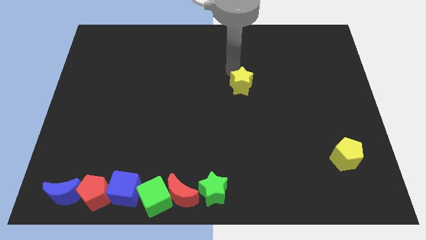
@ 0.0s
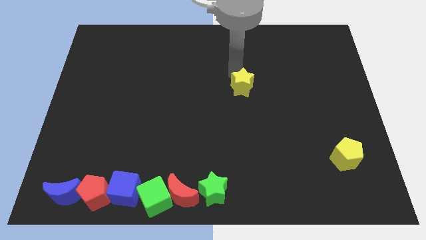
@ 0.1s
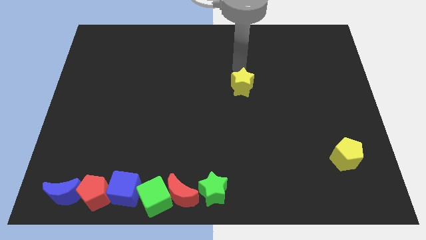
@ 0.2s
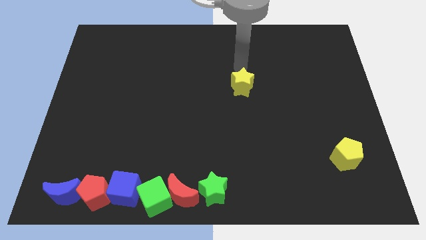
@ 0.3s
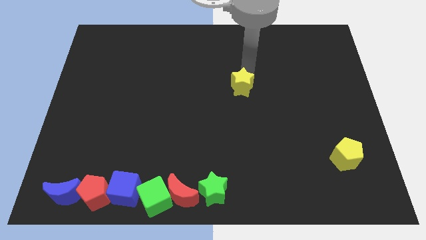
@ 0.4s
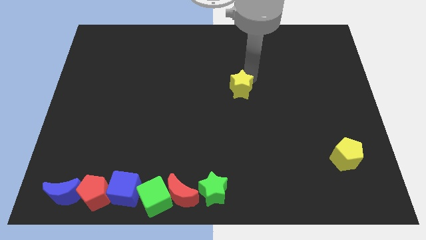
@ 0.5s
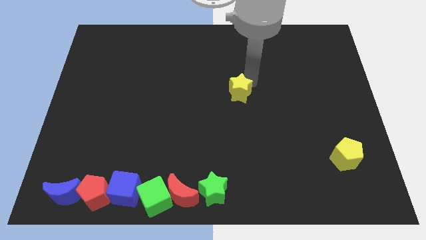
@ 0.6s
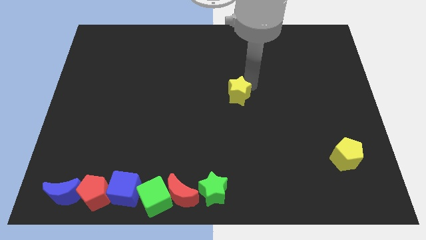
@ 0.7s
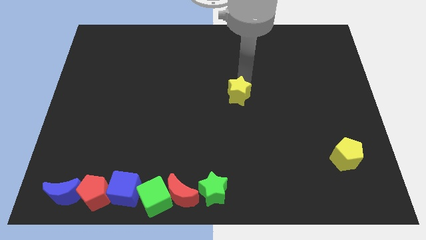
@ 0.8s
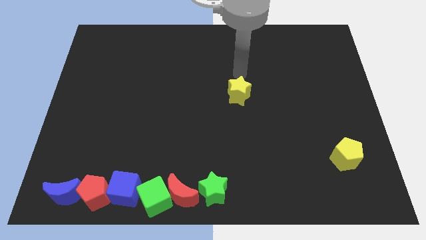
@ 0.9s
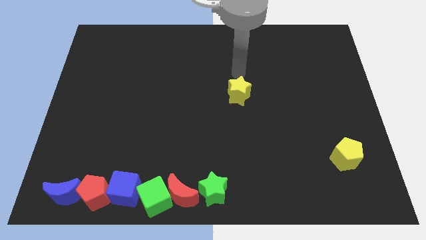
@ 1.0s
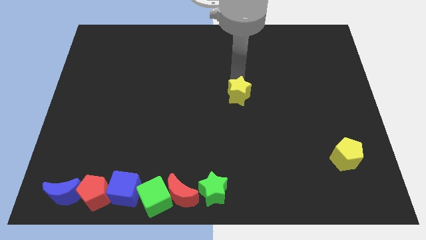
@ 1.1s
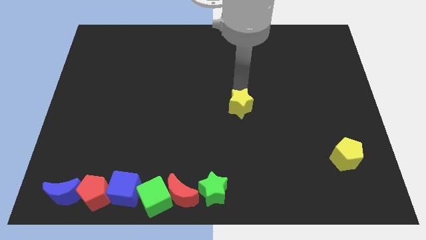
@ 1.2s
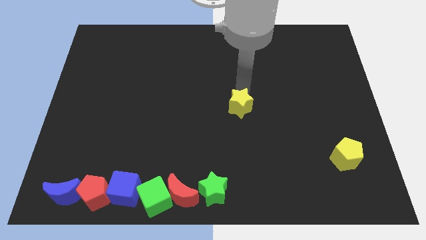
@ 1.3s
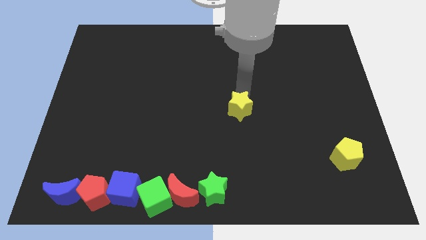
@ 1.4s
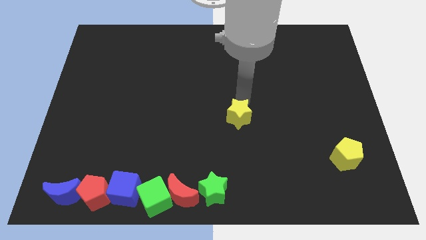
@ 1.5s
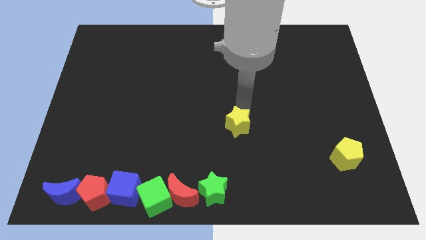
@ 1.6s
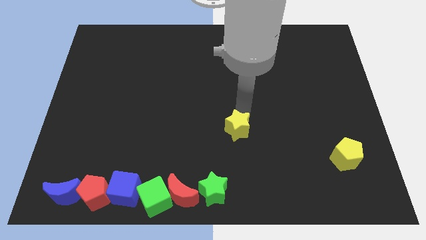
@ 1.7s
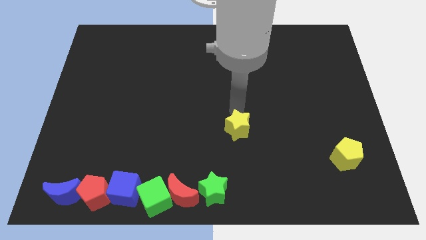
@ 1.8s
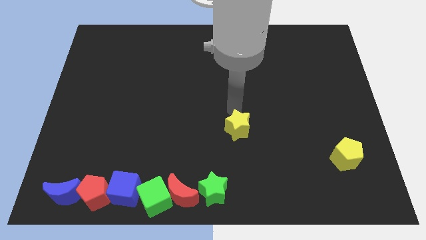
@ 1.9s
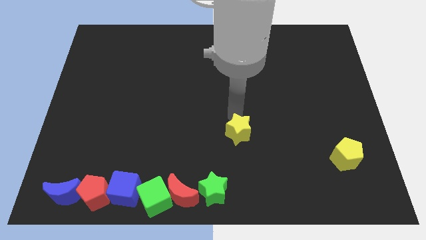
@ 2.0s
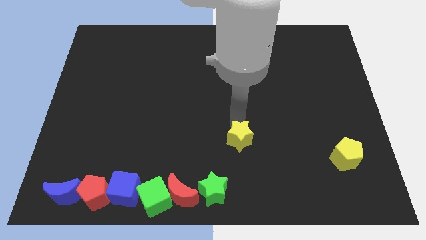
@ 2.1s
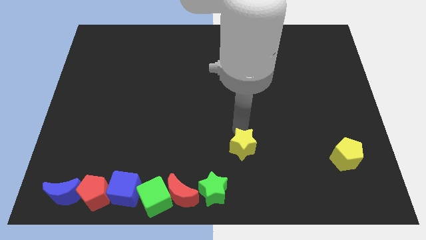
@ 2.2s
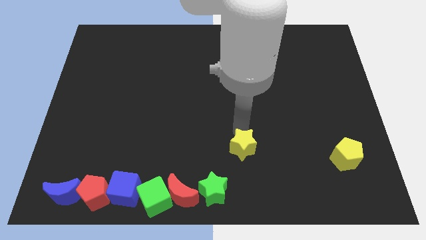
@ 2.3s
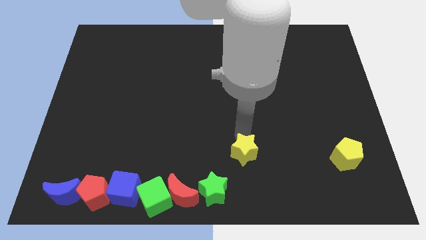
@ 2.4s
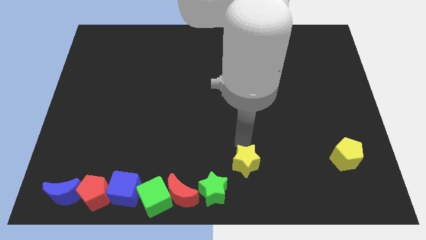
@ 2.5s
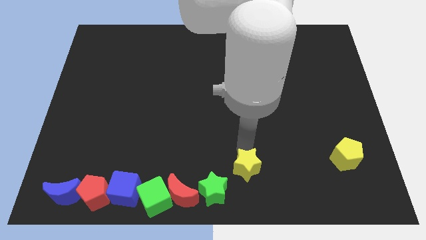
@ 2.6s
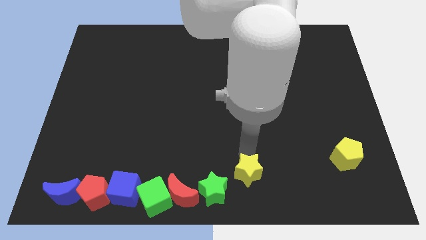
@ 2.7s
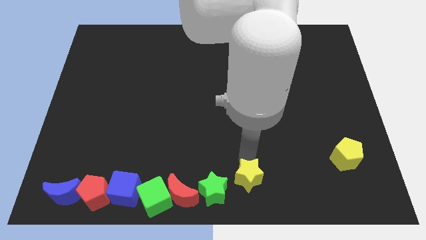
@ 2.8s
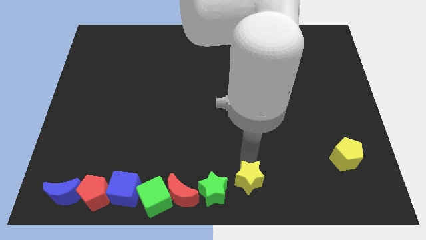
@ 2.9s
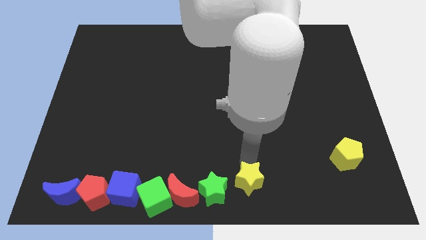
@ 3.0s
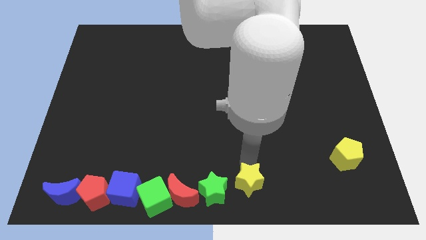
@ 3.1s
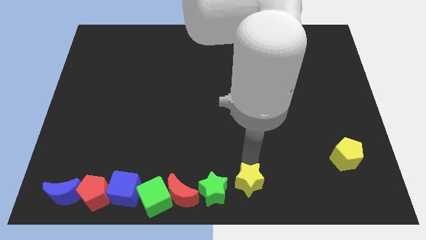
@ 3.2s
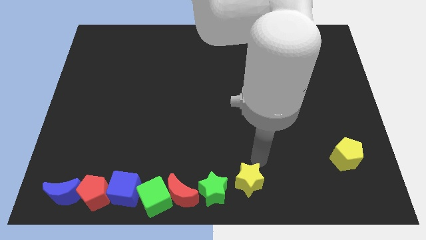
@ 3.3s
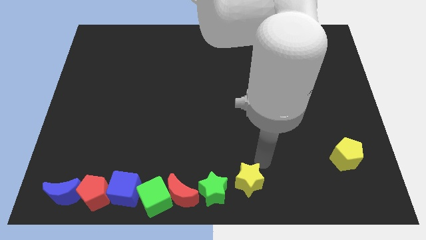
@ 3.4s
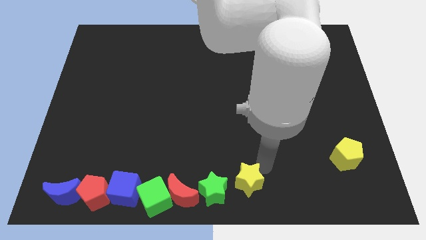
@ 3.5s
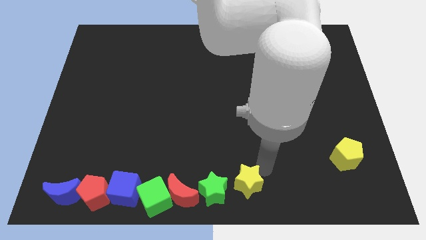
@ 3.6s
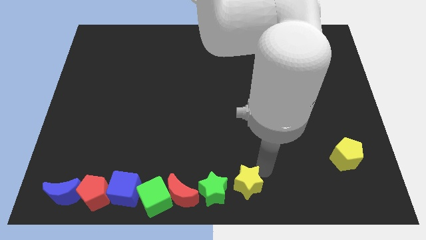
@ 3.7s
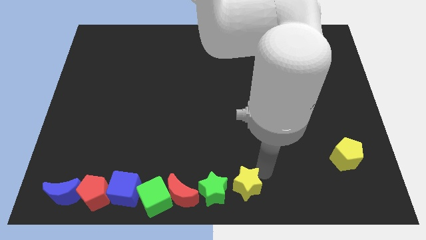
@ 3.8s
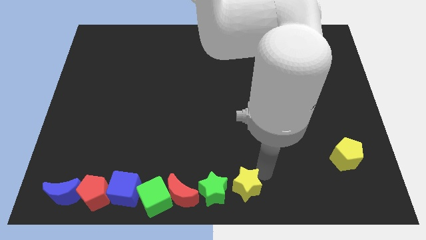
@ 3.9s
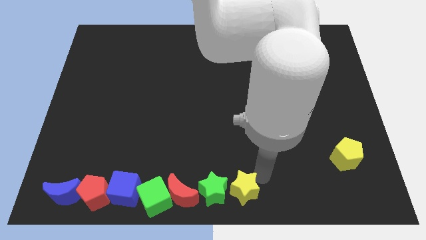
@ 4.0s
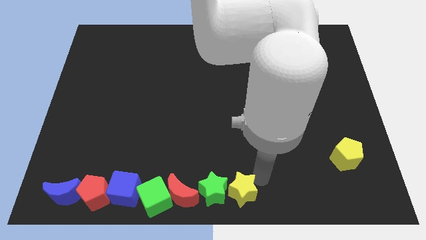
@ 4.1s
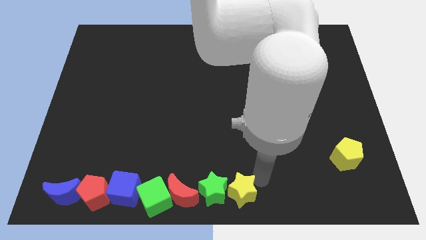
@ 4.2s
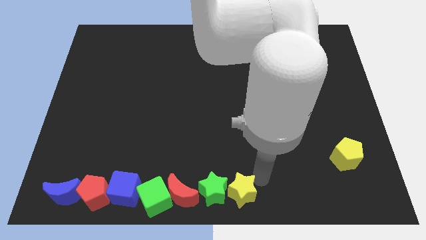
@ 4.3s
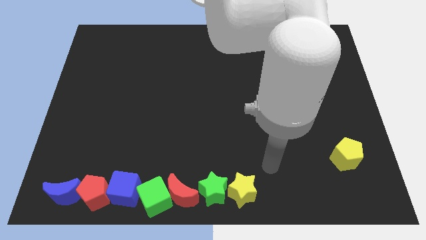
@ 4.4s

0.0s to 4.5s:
move the yellow star into the rgeen star to the right

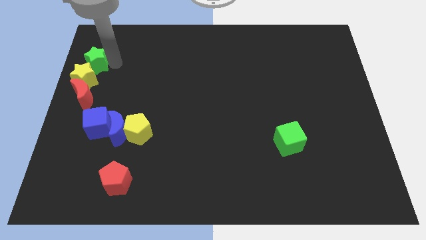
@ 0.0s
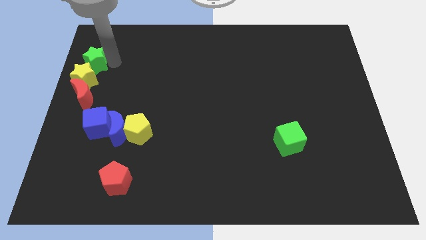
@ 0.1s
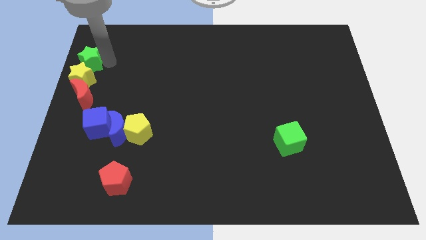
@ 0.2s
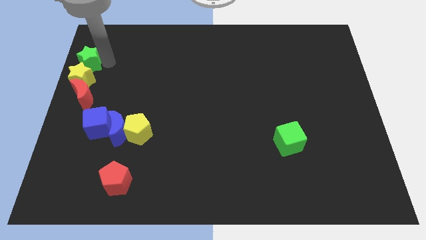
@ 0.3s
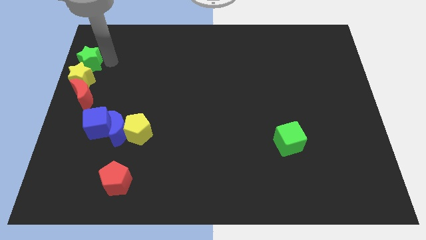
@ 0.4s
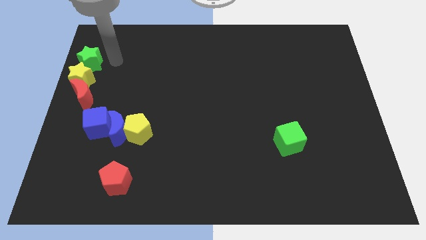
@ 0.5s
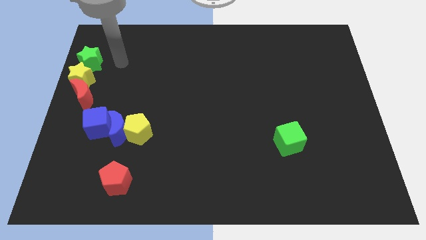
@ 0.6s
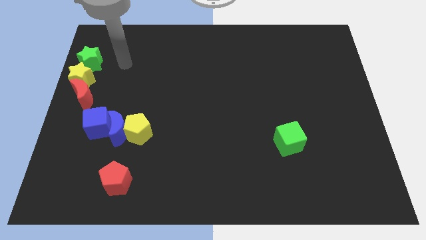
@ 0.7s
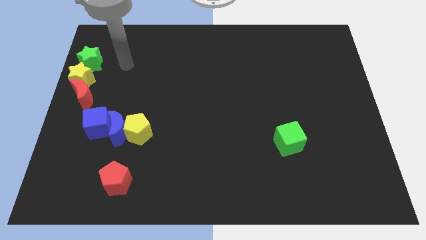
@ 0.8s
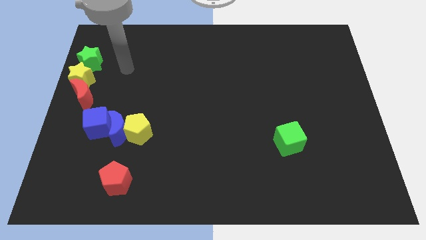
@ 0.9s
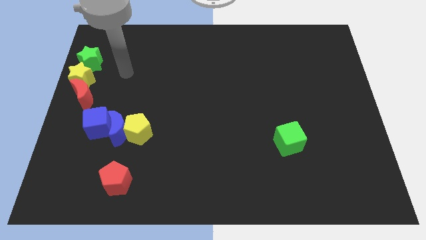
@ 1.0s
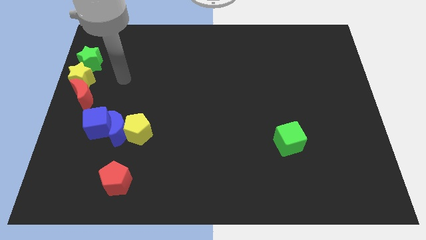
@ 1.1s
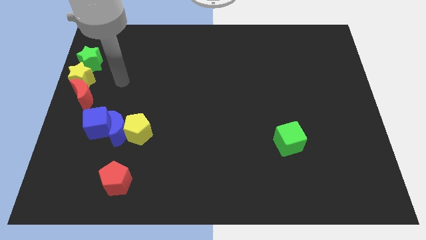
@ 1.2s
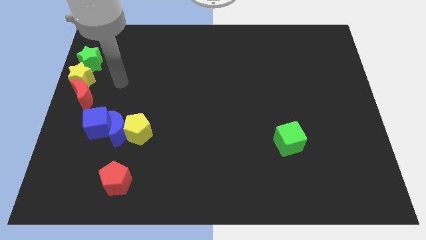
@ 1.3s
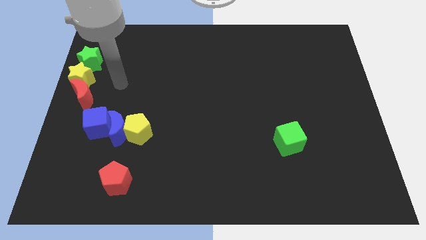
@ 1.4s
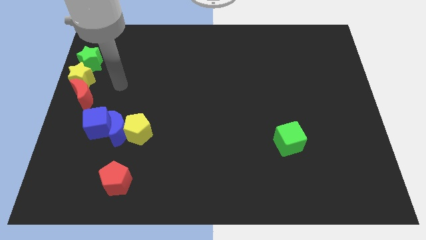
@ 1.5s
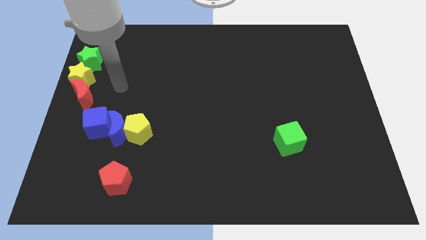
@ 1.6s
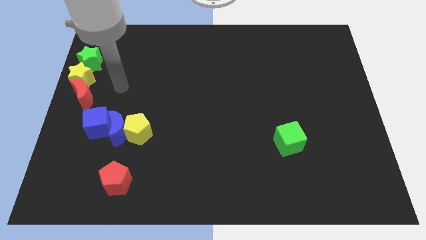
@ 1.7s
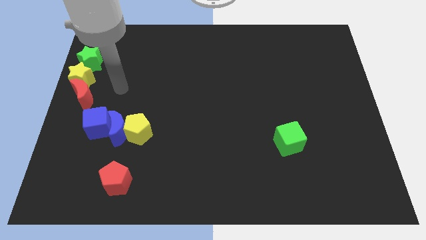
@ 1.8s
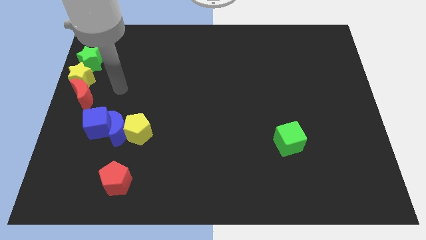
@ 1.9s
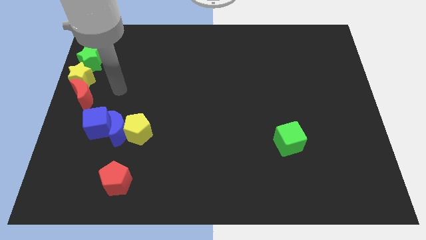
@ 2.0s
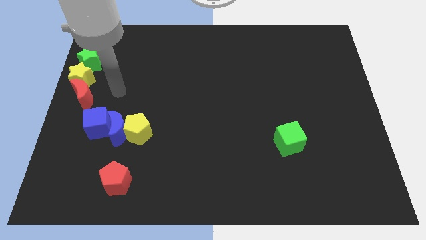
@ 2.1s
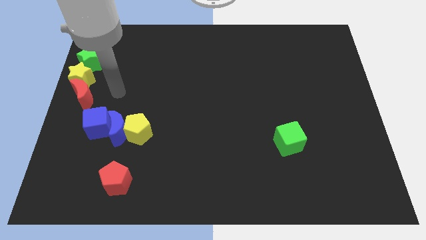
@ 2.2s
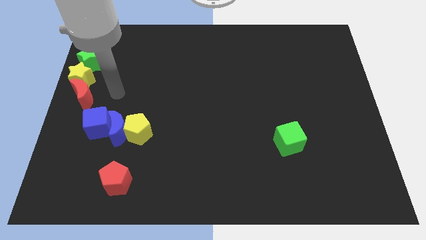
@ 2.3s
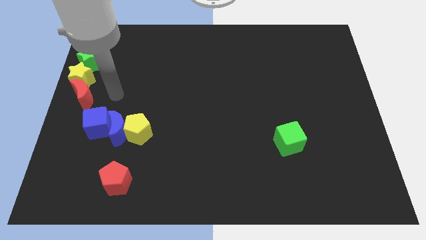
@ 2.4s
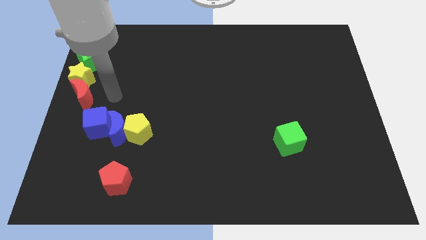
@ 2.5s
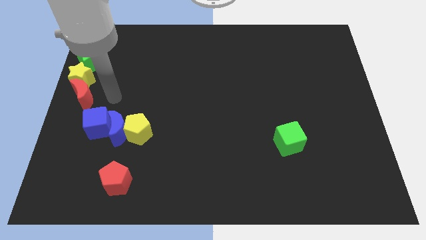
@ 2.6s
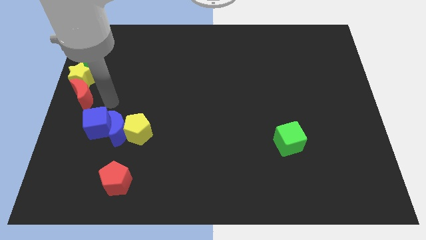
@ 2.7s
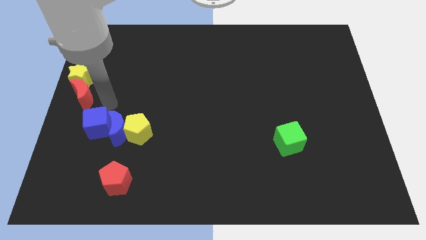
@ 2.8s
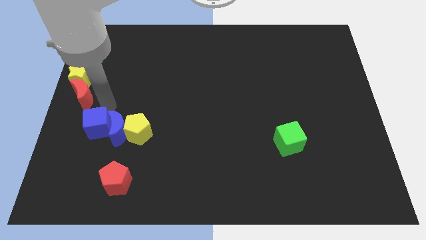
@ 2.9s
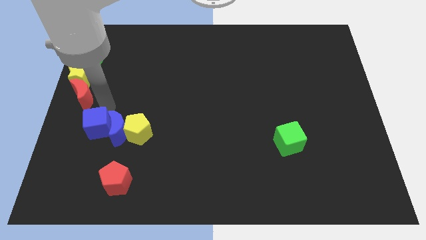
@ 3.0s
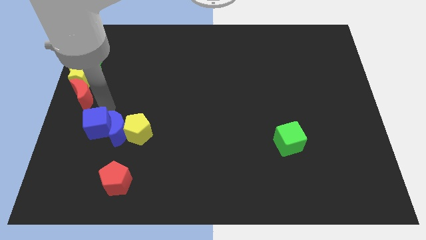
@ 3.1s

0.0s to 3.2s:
move your arm close to the blue cube

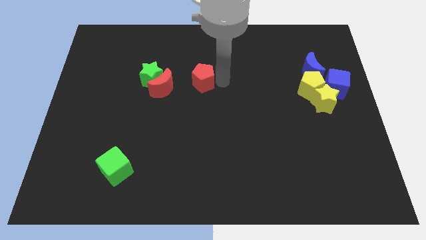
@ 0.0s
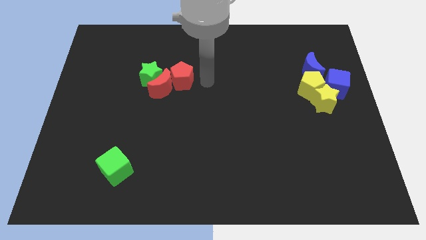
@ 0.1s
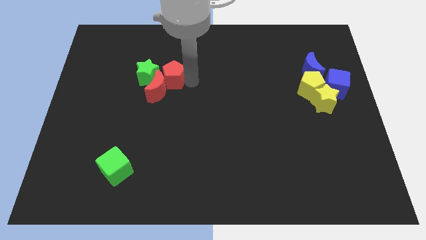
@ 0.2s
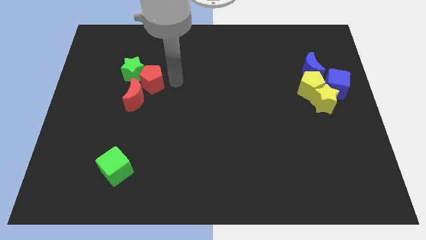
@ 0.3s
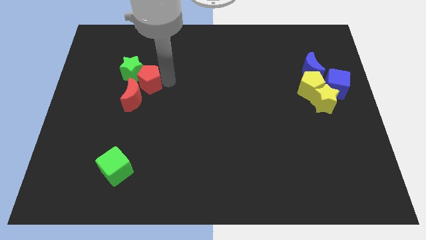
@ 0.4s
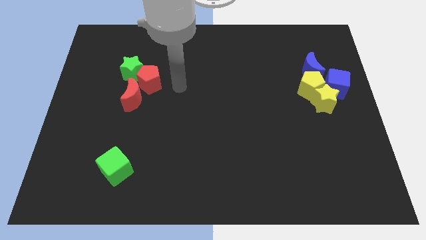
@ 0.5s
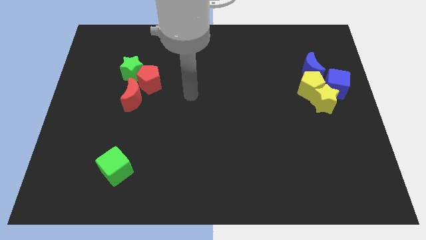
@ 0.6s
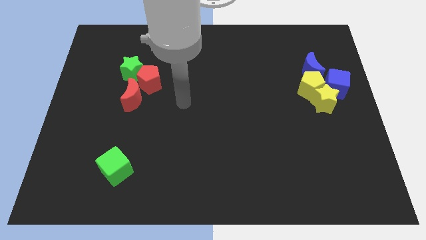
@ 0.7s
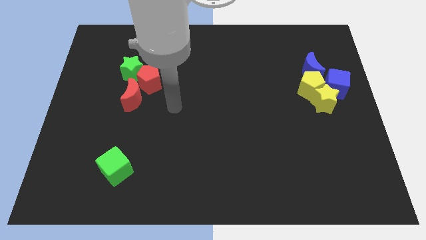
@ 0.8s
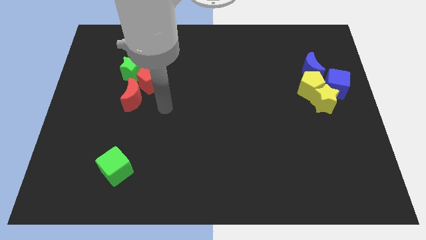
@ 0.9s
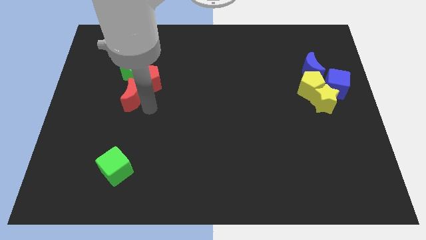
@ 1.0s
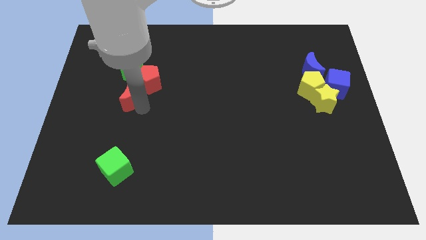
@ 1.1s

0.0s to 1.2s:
place your arm below the red pentagon

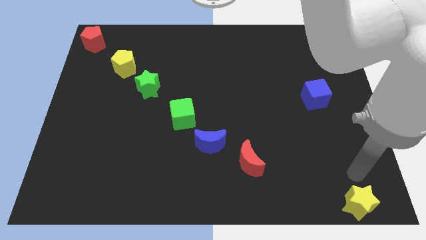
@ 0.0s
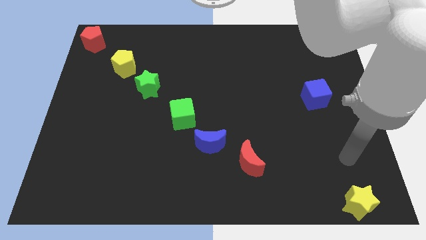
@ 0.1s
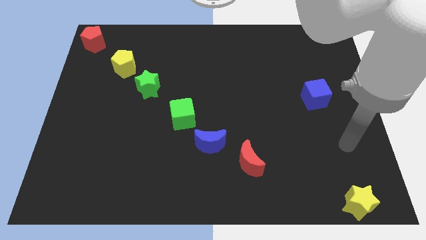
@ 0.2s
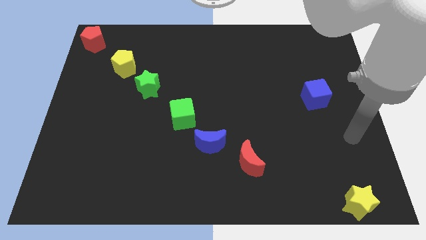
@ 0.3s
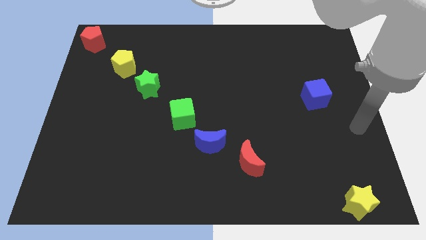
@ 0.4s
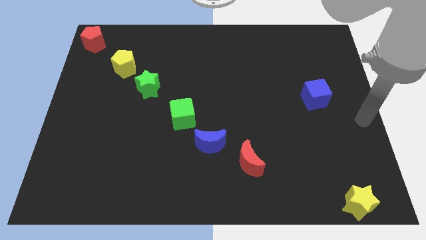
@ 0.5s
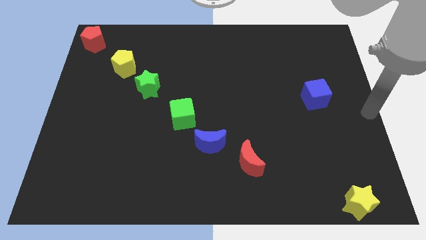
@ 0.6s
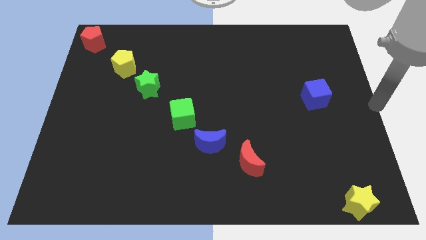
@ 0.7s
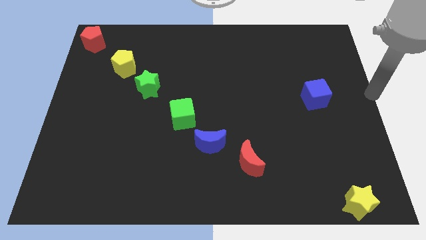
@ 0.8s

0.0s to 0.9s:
place the arm to the middle right of the board
